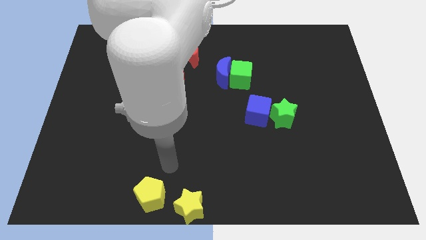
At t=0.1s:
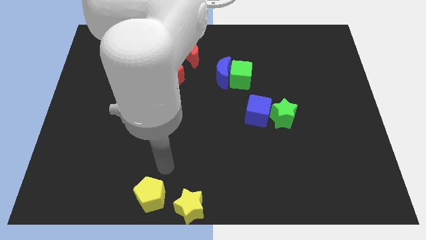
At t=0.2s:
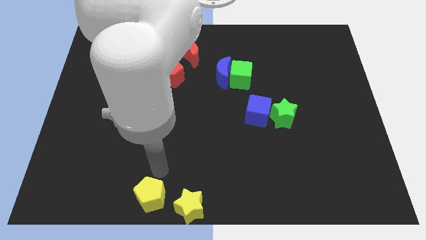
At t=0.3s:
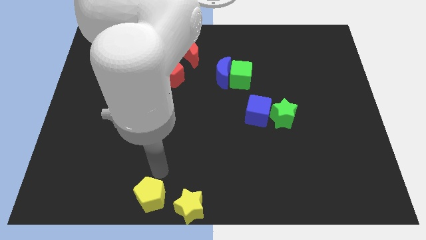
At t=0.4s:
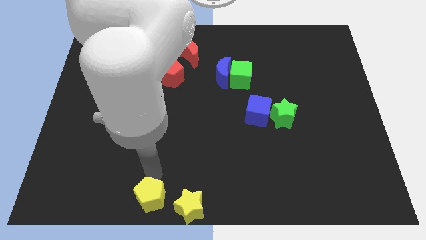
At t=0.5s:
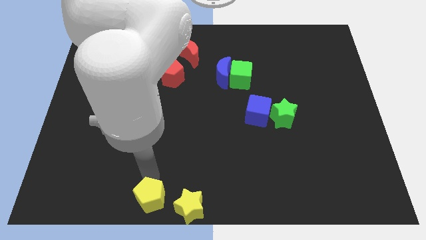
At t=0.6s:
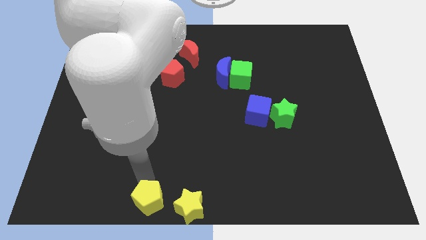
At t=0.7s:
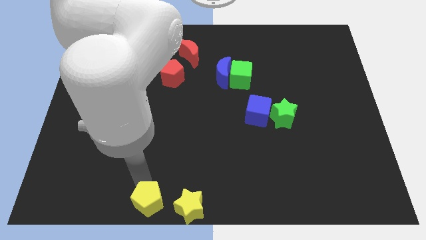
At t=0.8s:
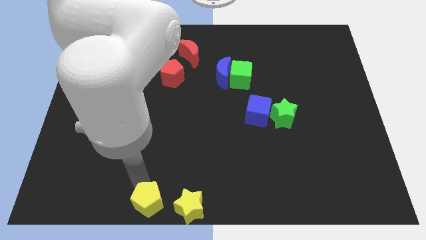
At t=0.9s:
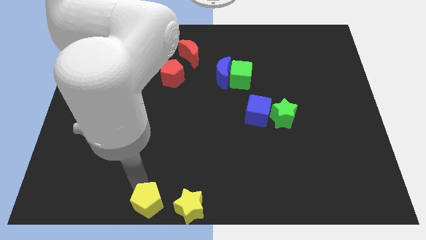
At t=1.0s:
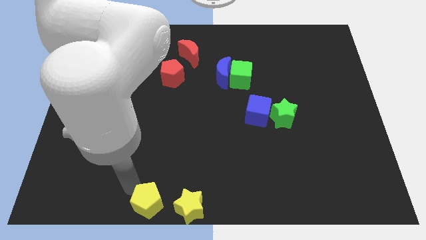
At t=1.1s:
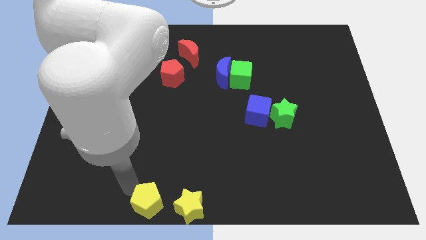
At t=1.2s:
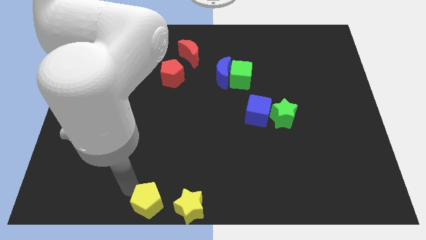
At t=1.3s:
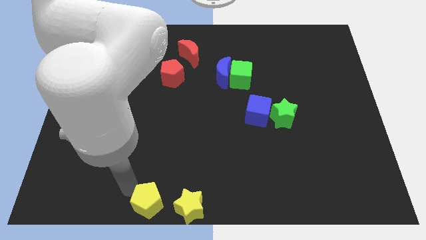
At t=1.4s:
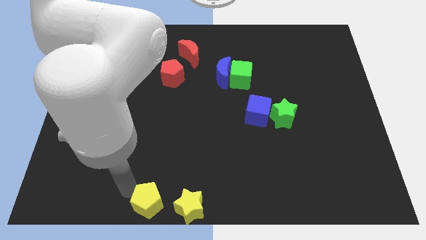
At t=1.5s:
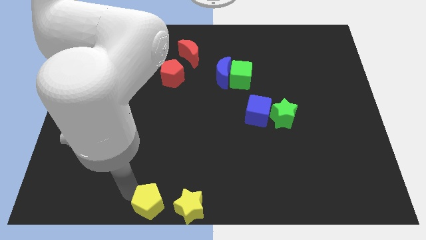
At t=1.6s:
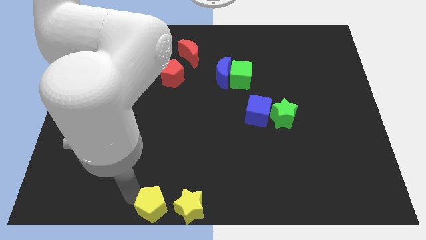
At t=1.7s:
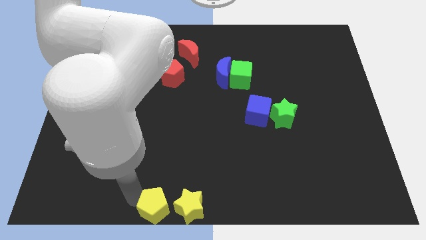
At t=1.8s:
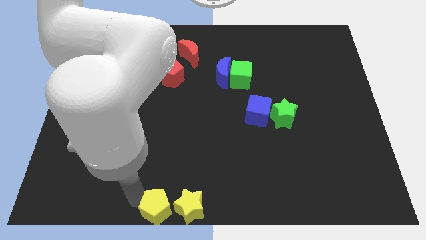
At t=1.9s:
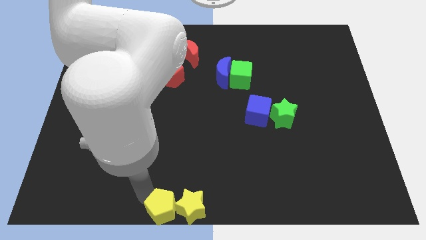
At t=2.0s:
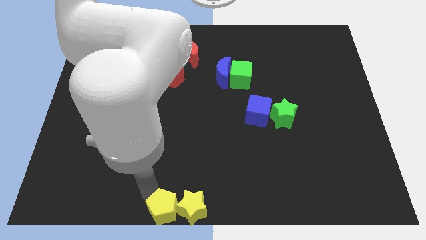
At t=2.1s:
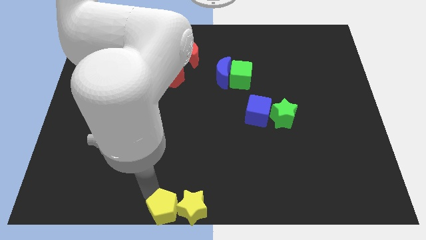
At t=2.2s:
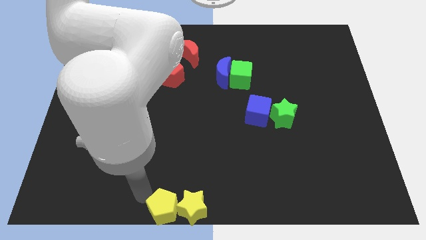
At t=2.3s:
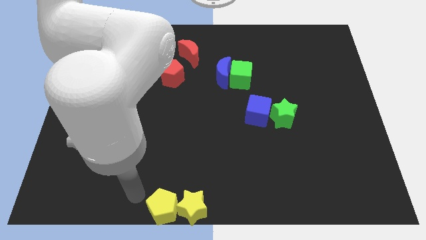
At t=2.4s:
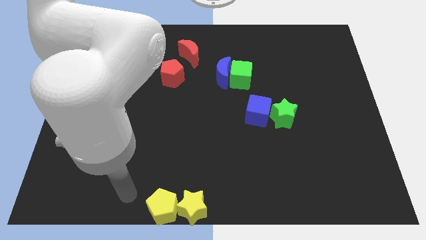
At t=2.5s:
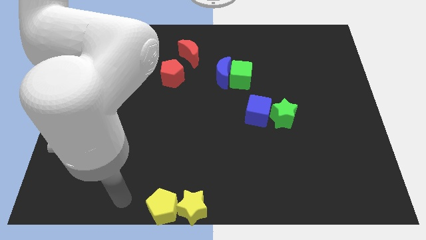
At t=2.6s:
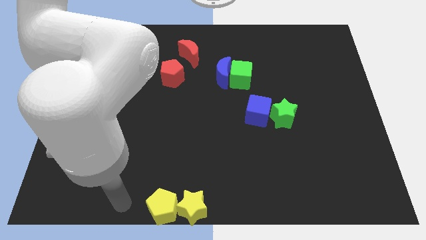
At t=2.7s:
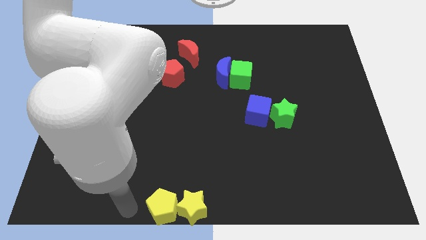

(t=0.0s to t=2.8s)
put the yellow blocks towards bottom centre

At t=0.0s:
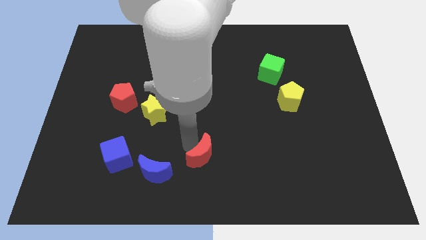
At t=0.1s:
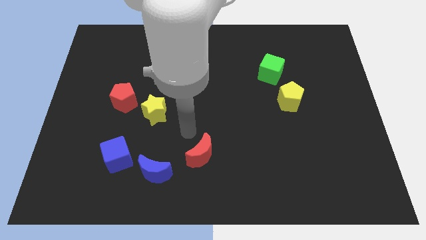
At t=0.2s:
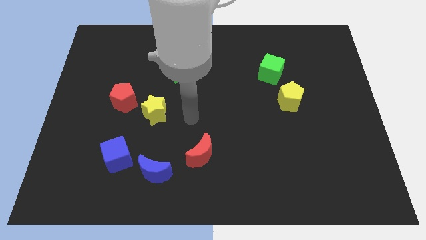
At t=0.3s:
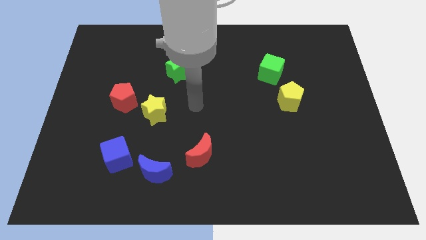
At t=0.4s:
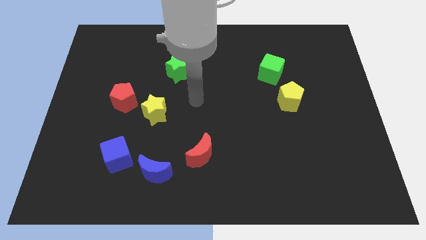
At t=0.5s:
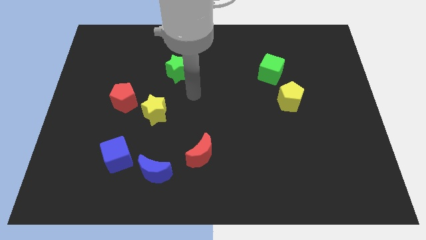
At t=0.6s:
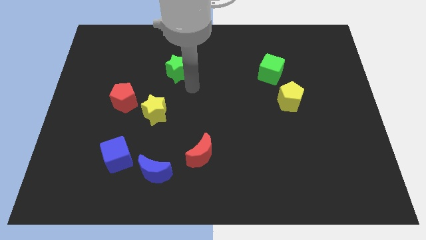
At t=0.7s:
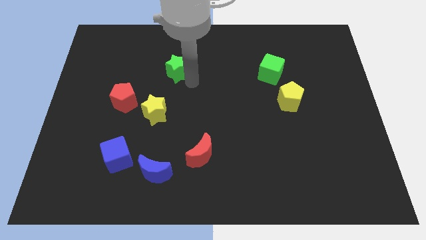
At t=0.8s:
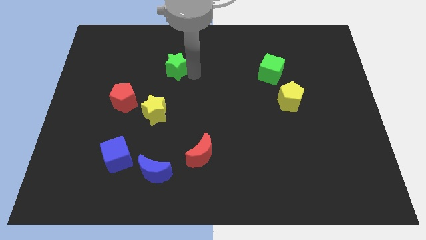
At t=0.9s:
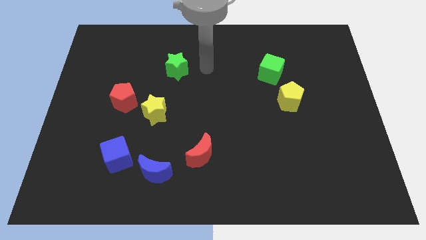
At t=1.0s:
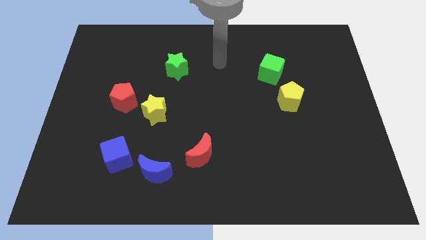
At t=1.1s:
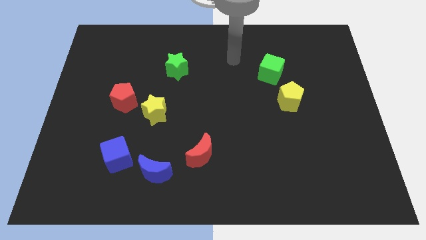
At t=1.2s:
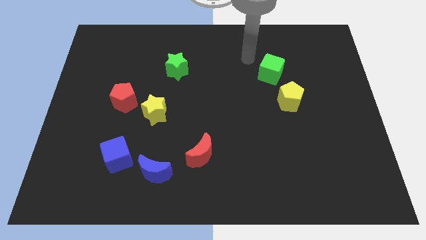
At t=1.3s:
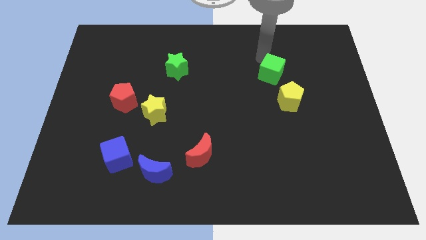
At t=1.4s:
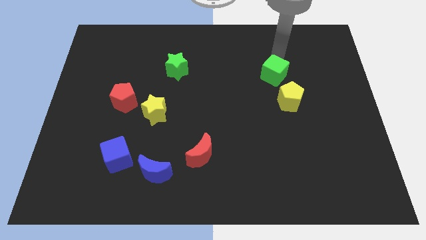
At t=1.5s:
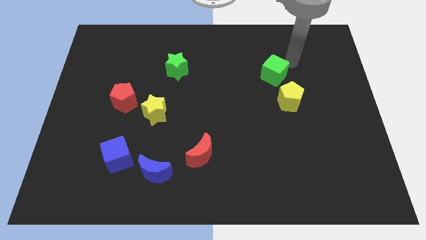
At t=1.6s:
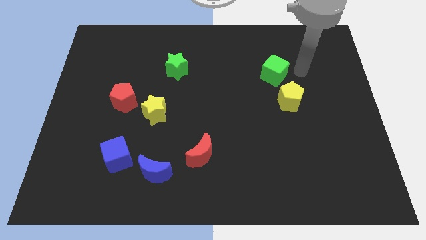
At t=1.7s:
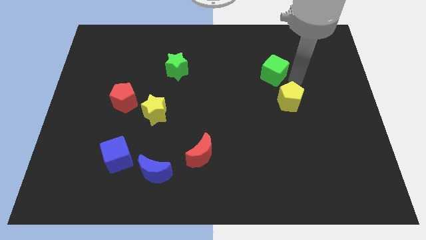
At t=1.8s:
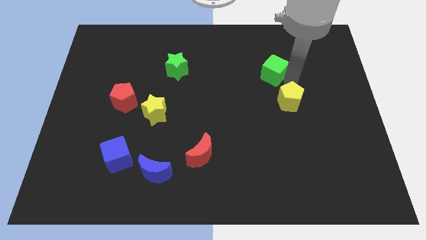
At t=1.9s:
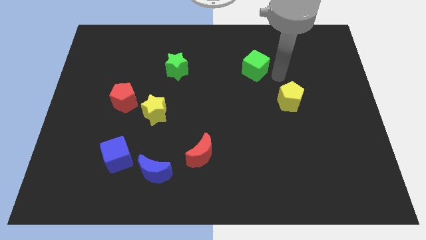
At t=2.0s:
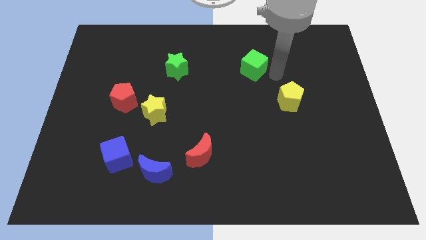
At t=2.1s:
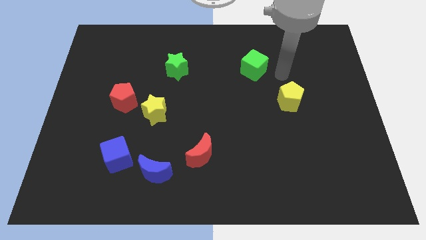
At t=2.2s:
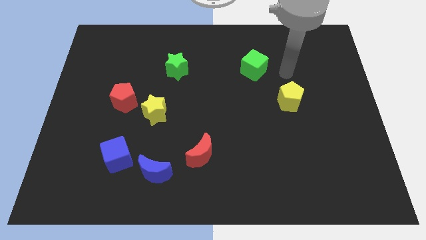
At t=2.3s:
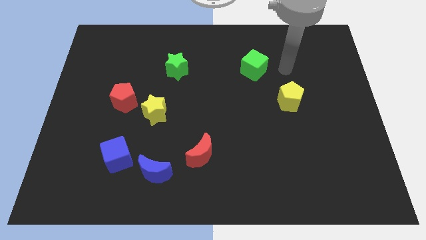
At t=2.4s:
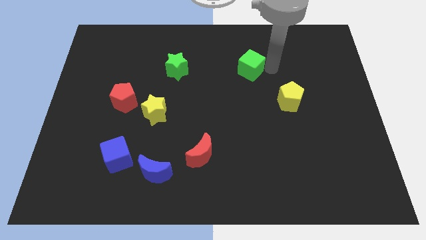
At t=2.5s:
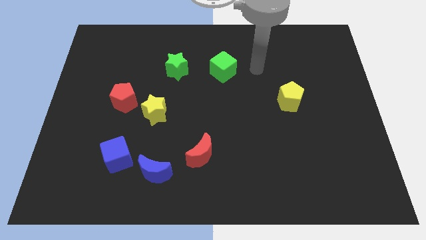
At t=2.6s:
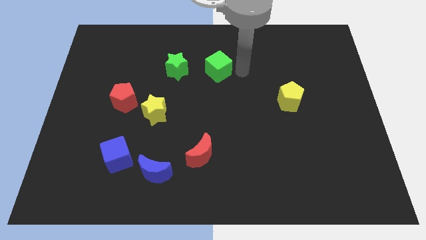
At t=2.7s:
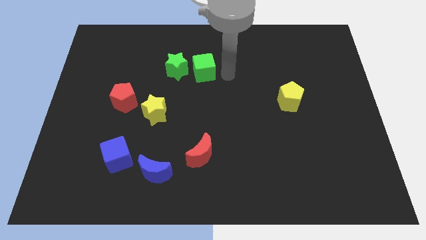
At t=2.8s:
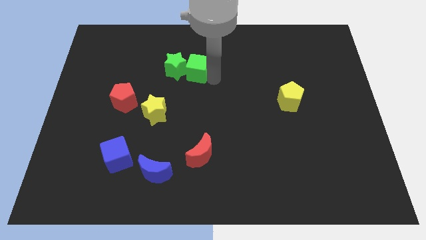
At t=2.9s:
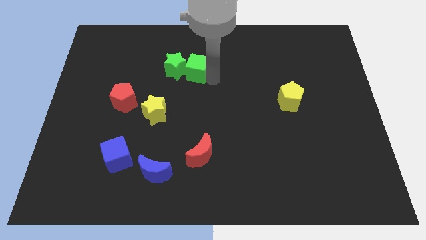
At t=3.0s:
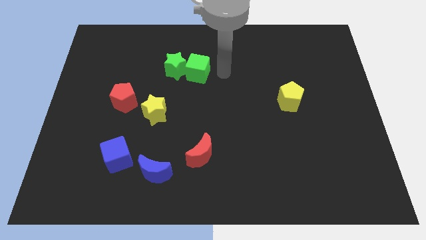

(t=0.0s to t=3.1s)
push green cube into green star

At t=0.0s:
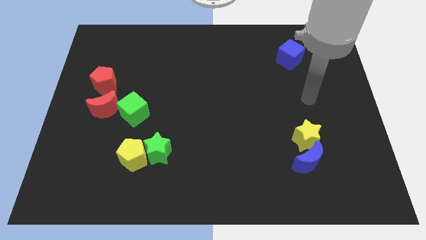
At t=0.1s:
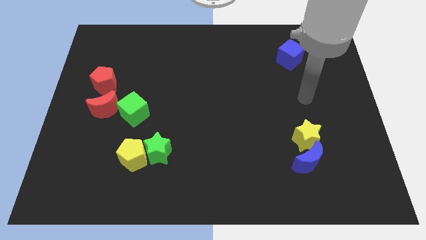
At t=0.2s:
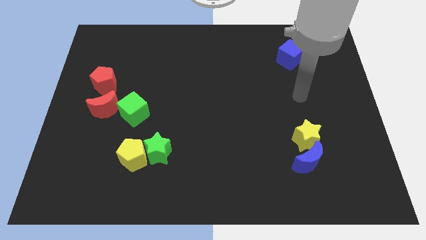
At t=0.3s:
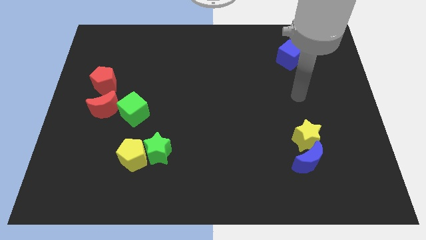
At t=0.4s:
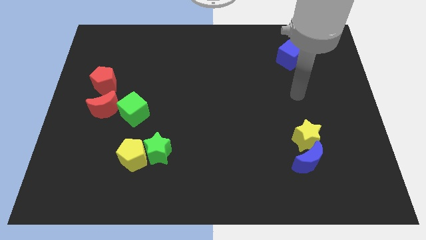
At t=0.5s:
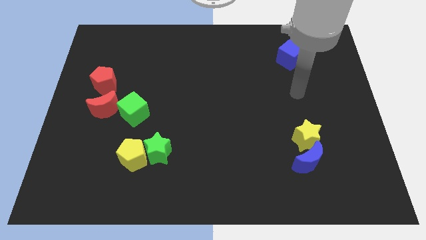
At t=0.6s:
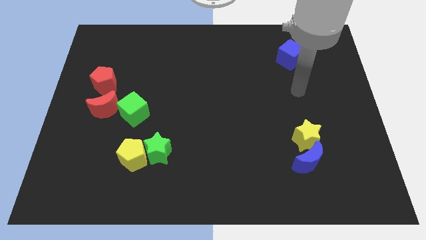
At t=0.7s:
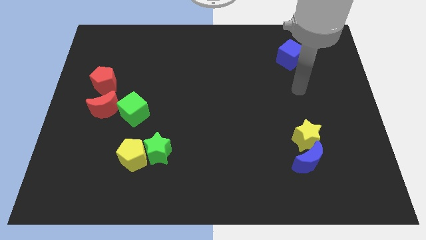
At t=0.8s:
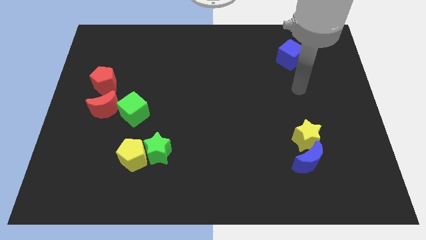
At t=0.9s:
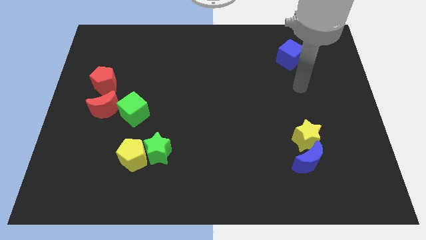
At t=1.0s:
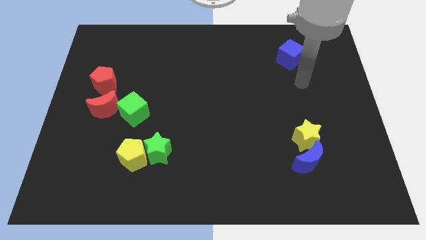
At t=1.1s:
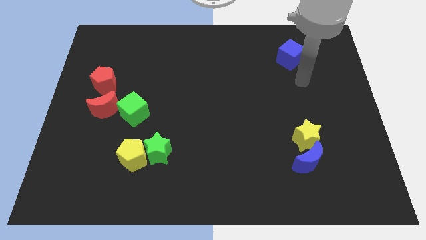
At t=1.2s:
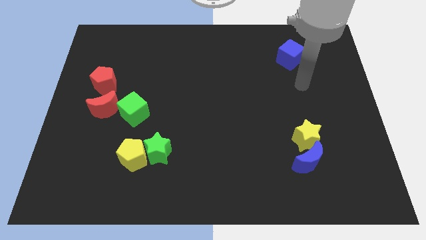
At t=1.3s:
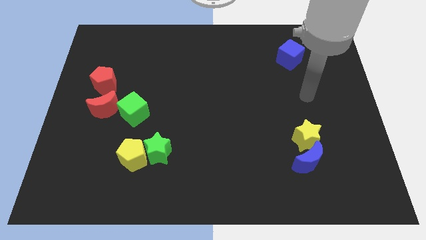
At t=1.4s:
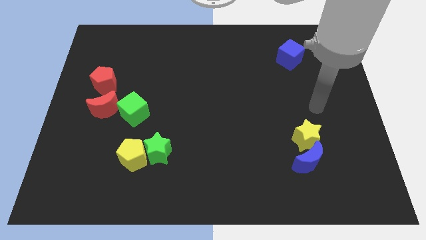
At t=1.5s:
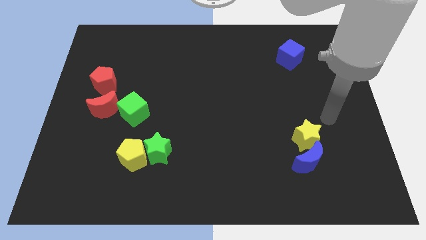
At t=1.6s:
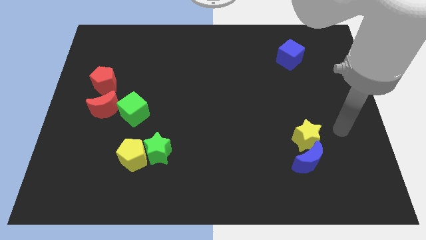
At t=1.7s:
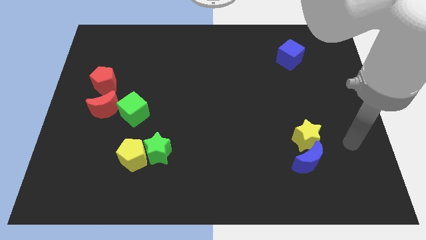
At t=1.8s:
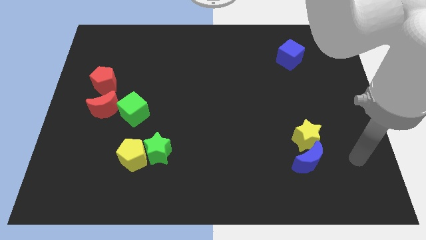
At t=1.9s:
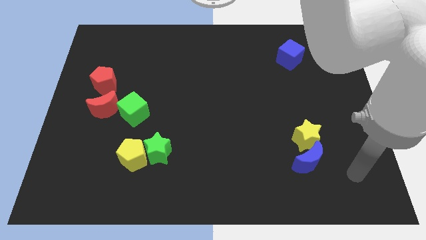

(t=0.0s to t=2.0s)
move your hand towards the bottom right

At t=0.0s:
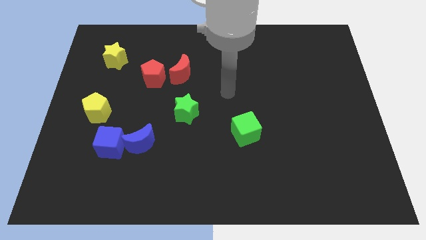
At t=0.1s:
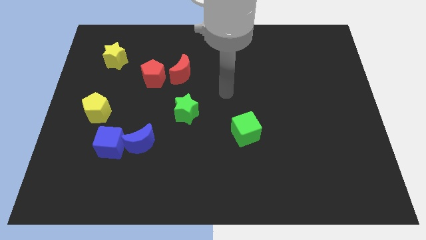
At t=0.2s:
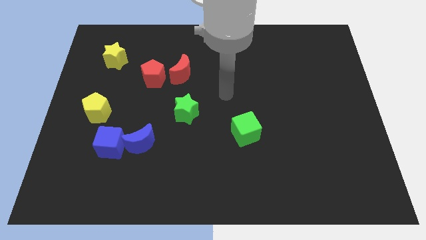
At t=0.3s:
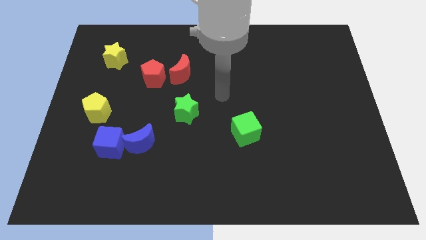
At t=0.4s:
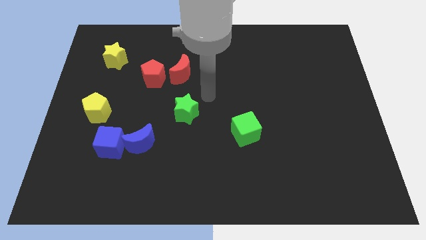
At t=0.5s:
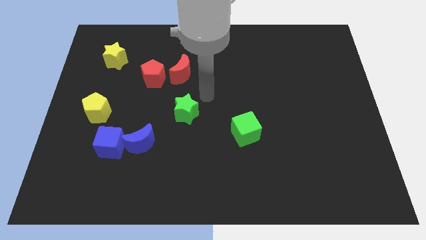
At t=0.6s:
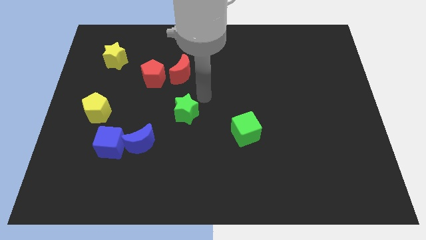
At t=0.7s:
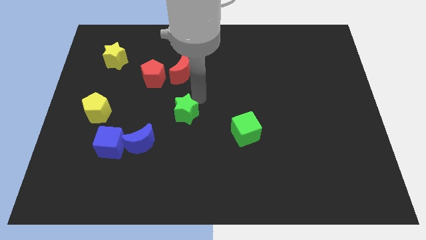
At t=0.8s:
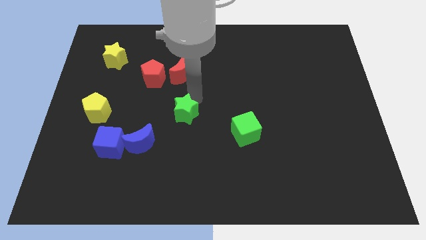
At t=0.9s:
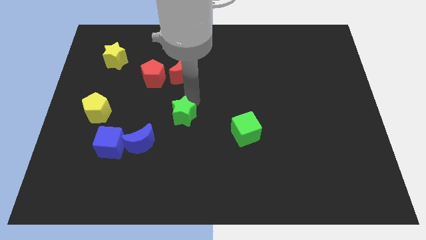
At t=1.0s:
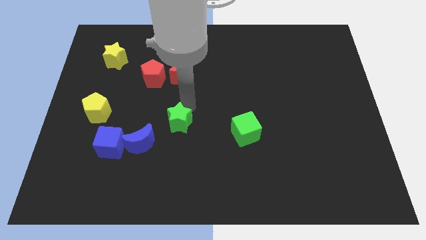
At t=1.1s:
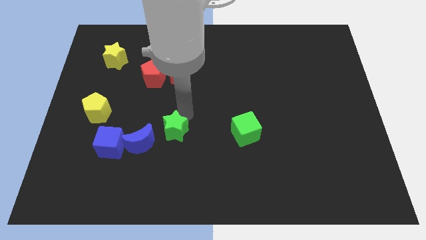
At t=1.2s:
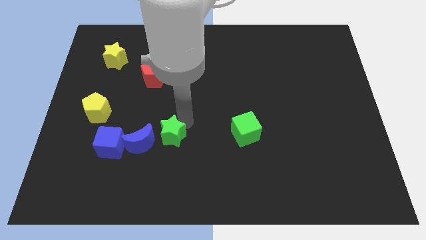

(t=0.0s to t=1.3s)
place the green star in between the green cube and blue moon
